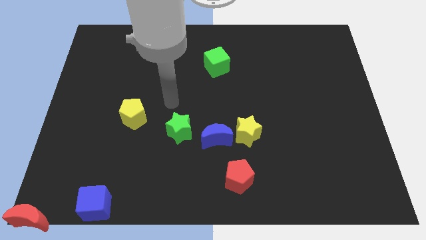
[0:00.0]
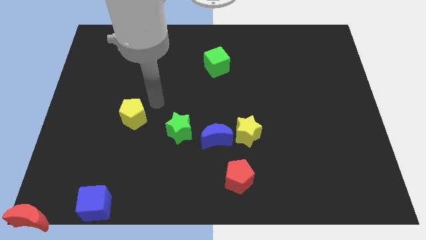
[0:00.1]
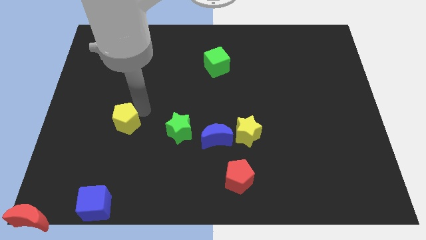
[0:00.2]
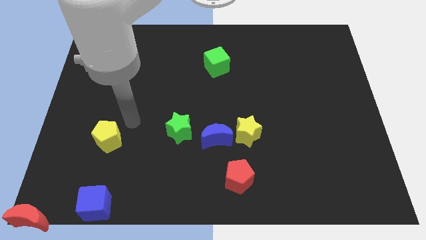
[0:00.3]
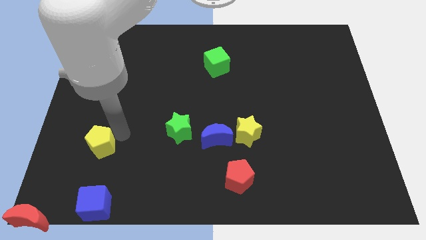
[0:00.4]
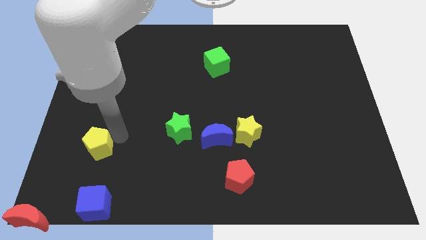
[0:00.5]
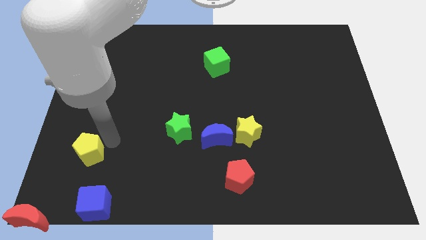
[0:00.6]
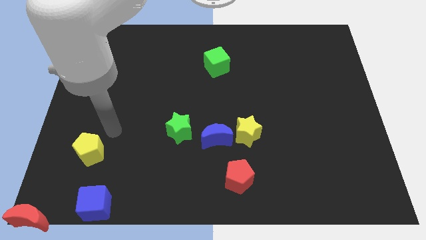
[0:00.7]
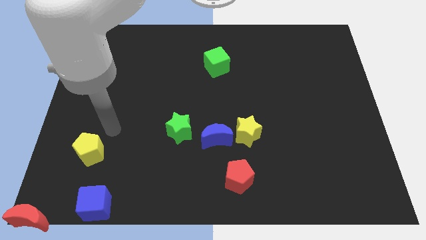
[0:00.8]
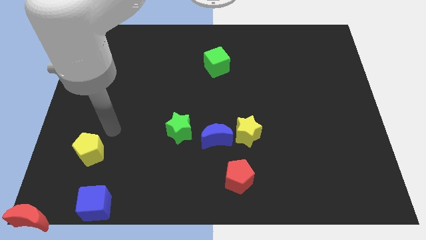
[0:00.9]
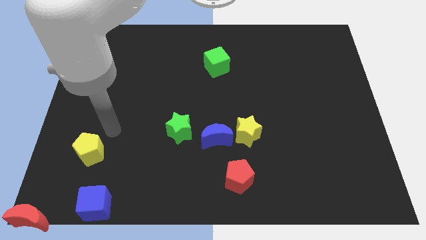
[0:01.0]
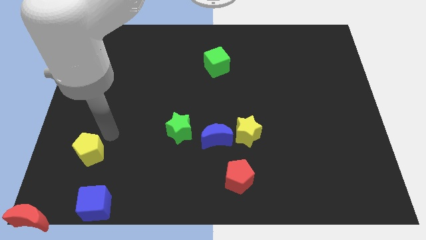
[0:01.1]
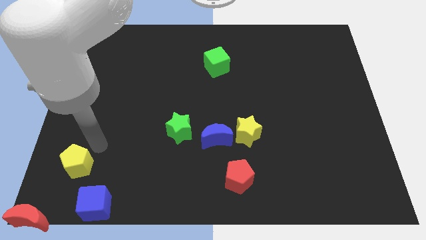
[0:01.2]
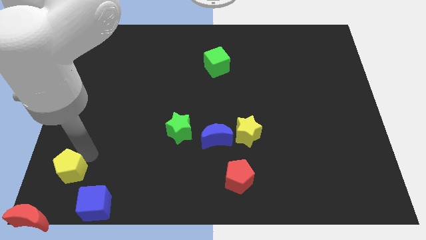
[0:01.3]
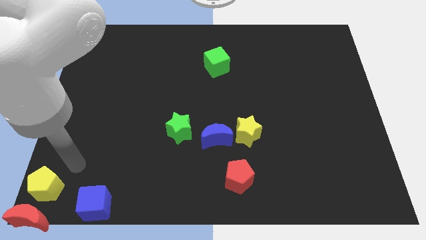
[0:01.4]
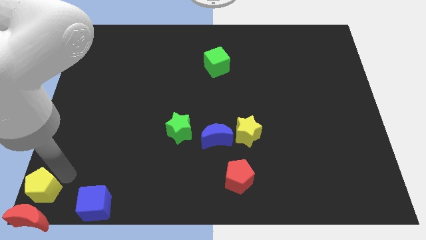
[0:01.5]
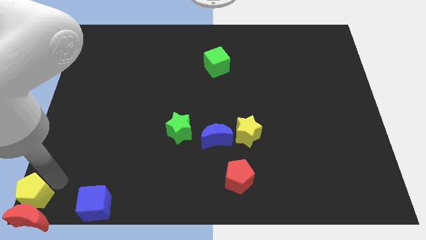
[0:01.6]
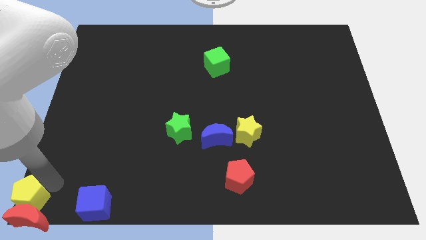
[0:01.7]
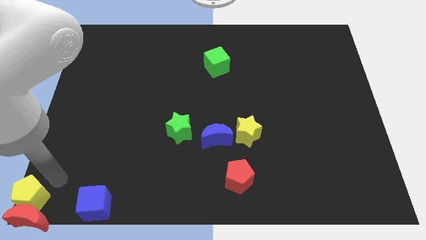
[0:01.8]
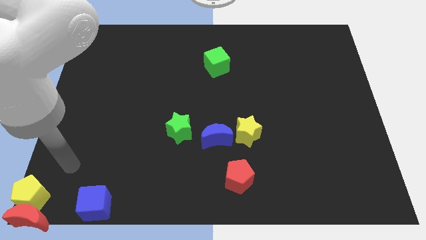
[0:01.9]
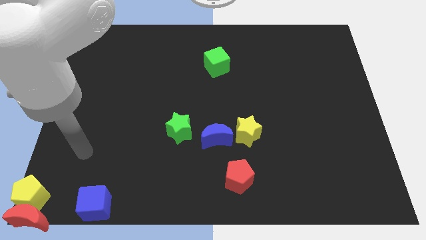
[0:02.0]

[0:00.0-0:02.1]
put the yellow pentagon to the top side of the red moon

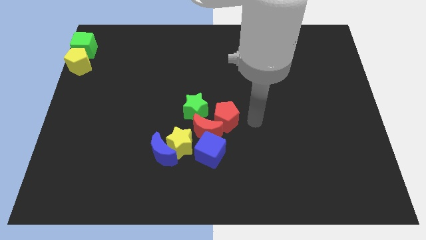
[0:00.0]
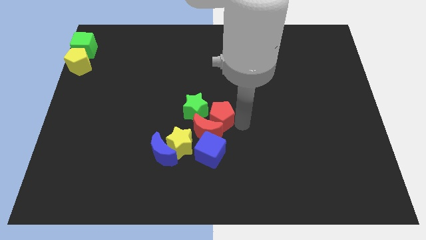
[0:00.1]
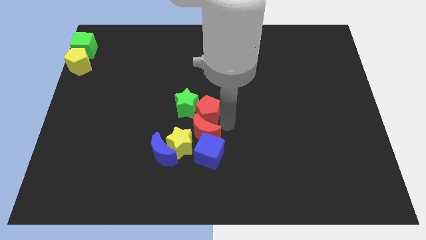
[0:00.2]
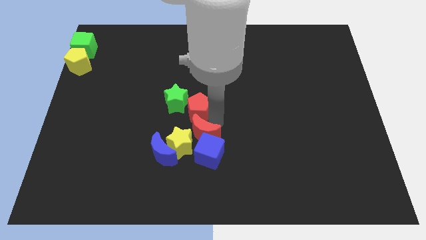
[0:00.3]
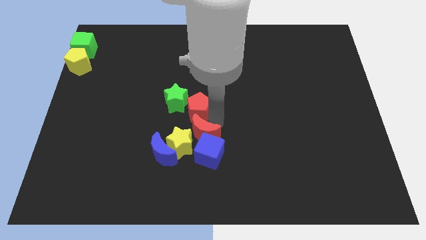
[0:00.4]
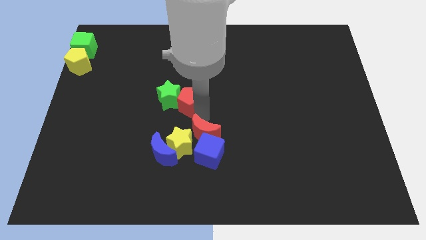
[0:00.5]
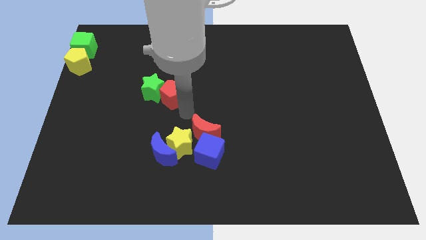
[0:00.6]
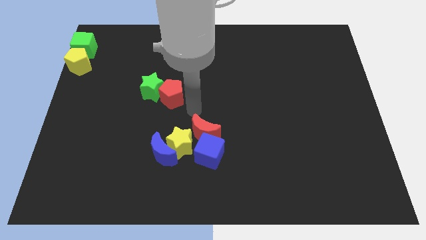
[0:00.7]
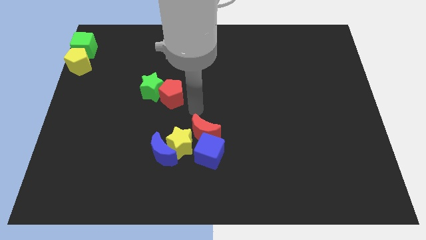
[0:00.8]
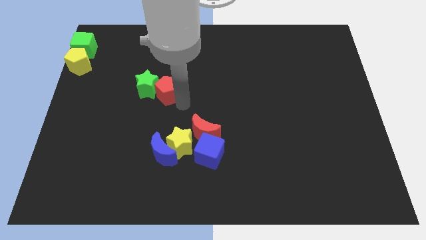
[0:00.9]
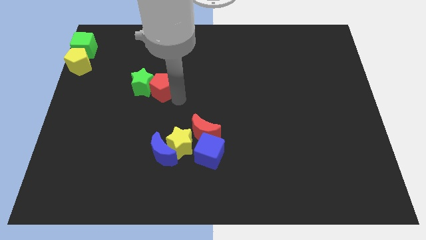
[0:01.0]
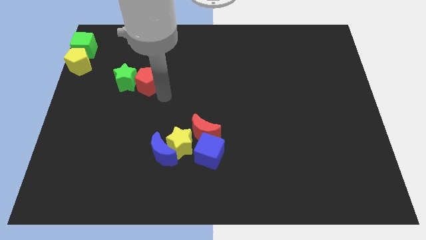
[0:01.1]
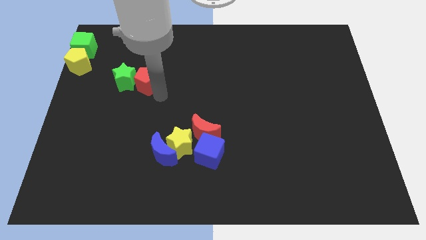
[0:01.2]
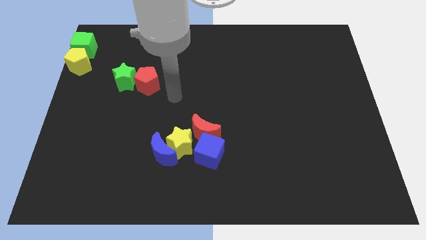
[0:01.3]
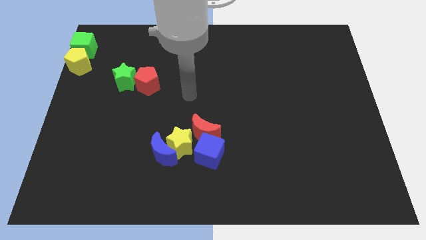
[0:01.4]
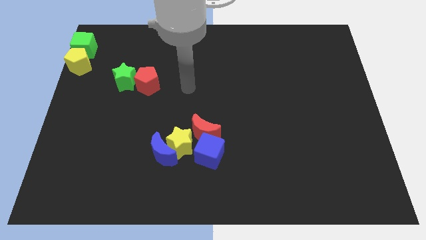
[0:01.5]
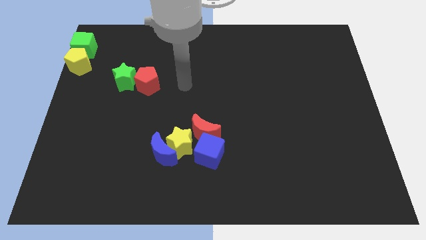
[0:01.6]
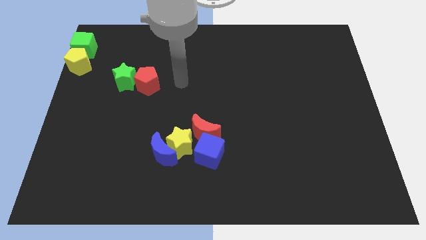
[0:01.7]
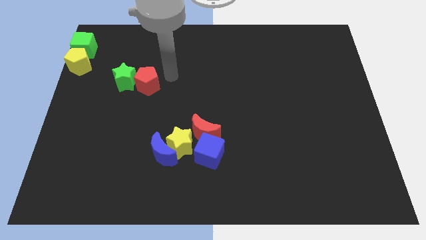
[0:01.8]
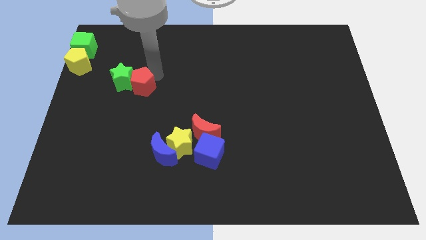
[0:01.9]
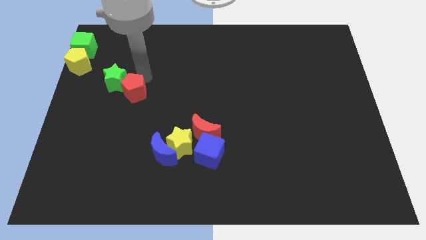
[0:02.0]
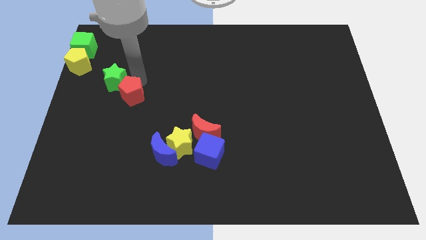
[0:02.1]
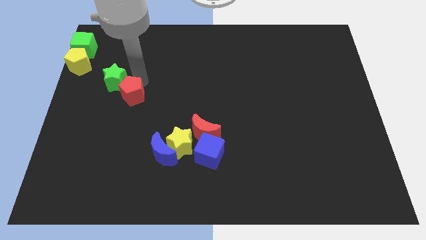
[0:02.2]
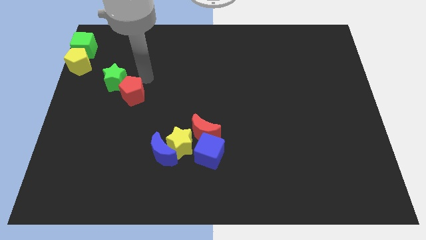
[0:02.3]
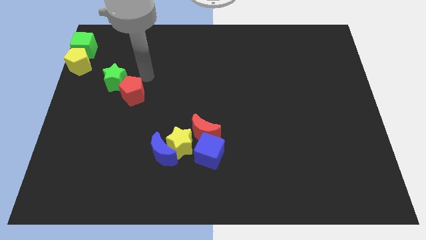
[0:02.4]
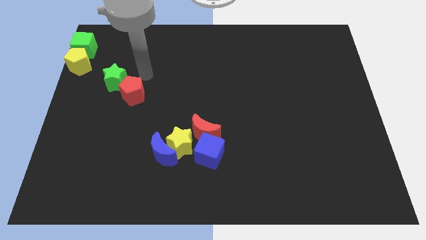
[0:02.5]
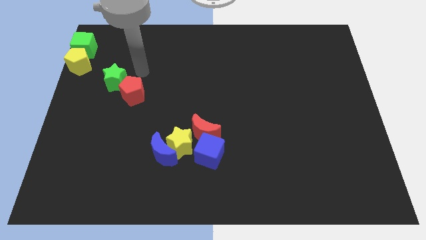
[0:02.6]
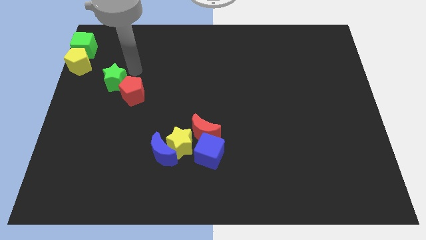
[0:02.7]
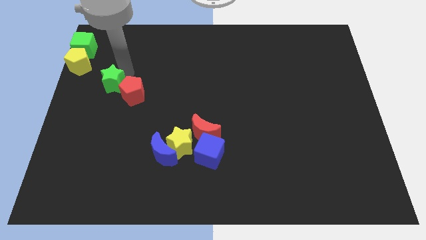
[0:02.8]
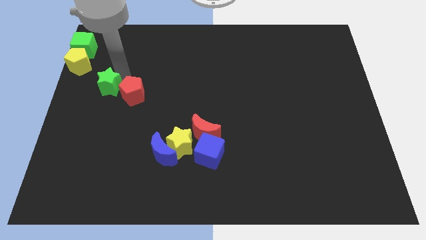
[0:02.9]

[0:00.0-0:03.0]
move the green star and the red pentagon towards the left

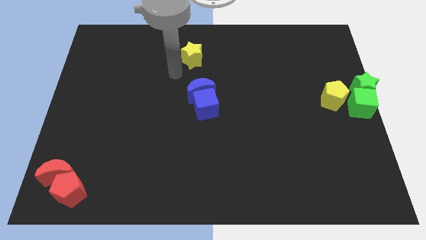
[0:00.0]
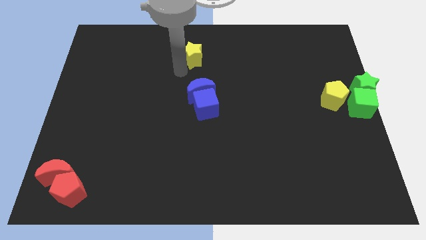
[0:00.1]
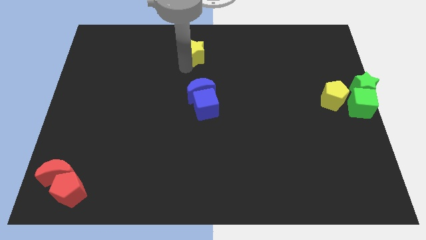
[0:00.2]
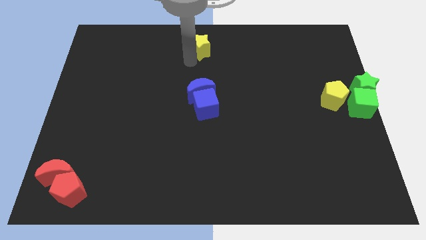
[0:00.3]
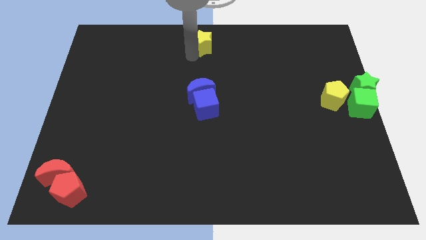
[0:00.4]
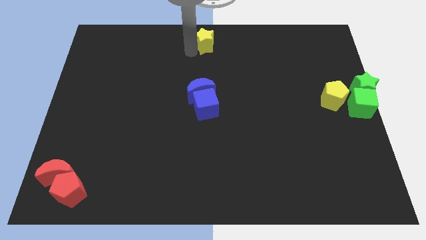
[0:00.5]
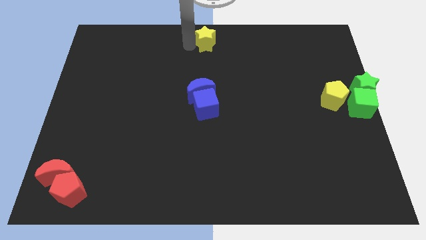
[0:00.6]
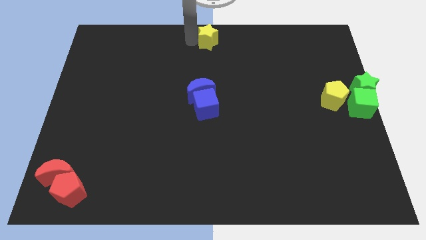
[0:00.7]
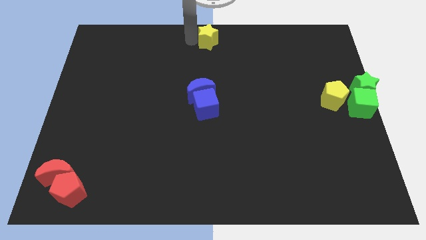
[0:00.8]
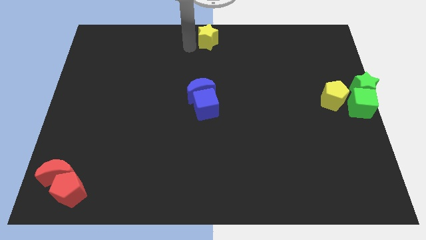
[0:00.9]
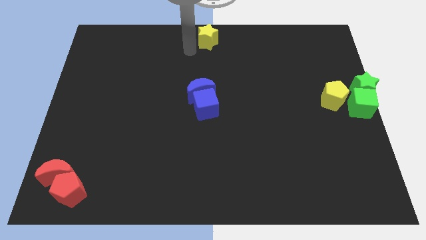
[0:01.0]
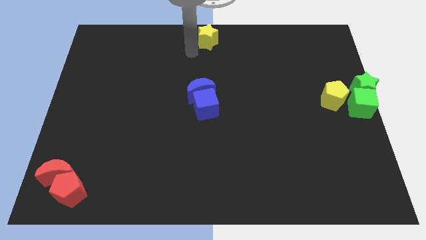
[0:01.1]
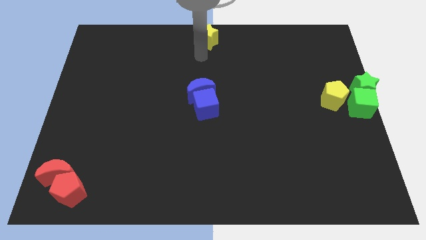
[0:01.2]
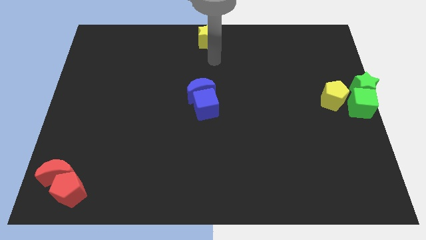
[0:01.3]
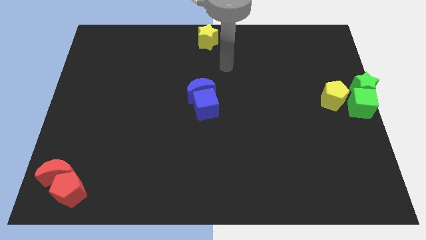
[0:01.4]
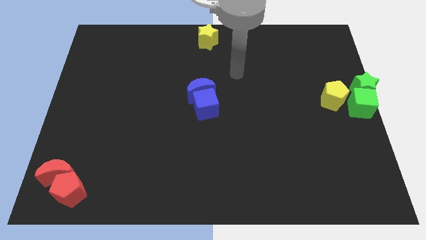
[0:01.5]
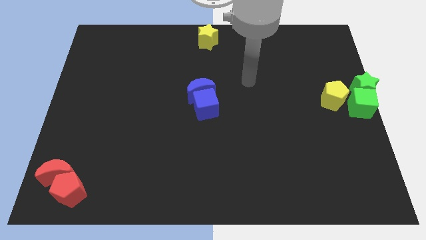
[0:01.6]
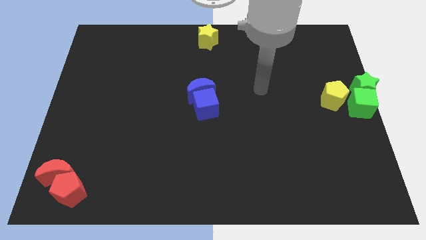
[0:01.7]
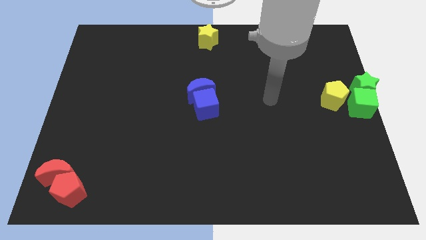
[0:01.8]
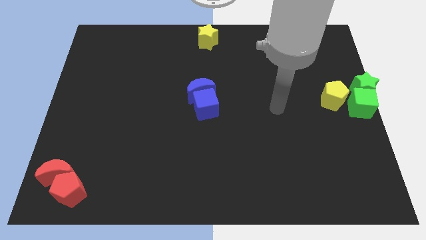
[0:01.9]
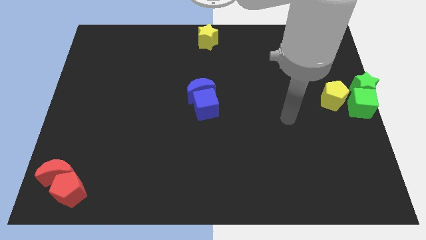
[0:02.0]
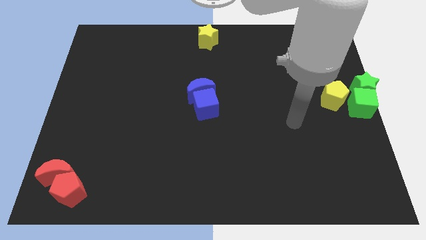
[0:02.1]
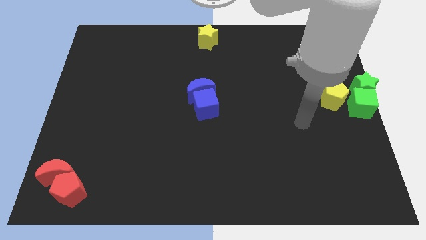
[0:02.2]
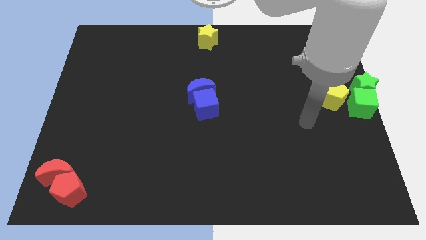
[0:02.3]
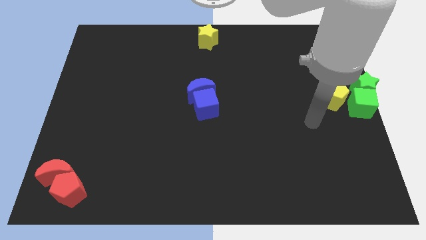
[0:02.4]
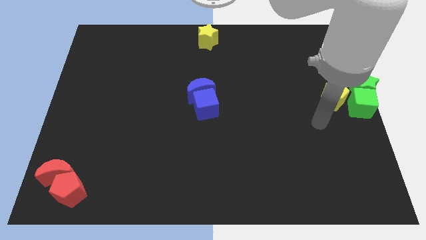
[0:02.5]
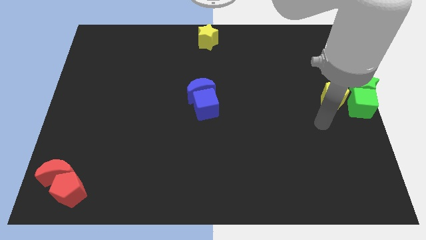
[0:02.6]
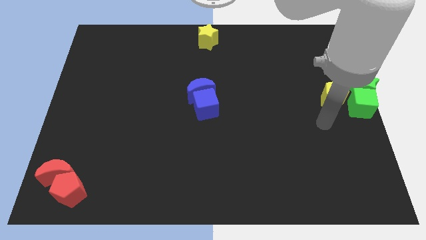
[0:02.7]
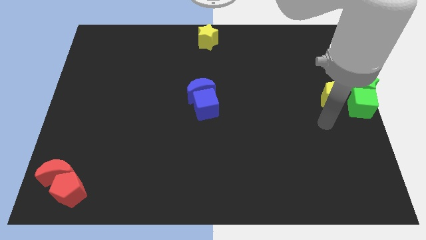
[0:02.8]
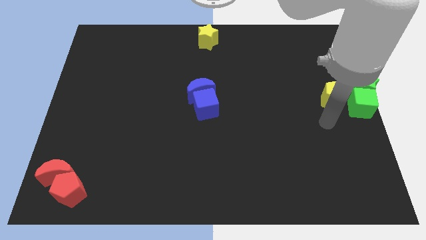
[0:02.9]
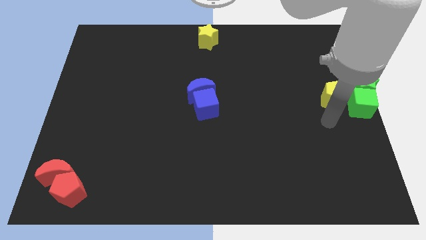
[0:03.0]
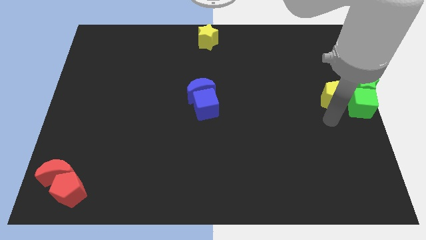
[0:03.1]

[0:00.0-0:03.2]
put the yellow star at the top center of the board

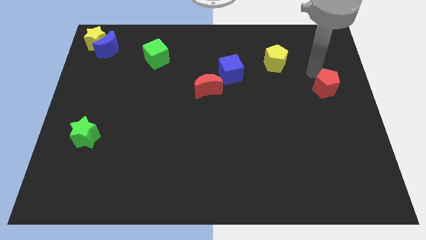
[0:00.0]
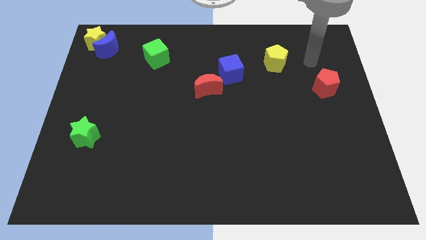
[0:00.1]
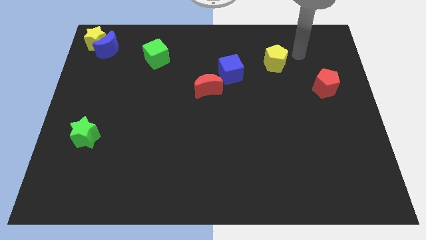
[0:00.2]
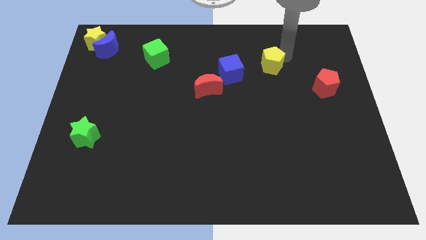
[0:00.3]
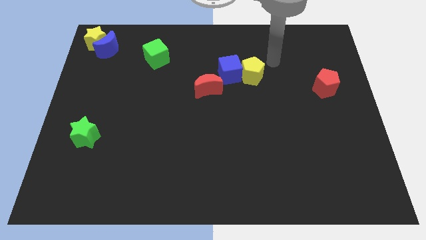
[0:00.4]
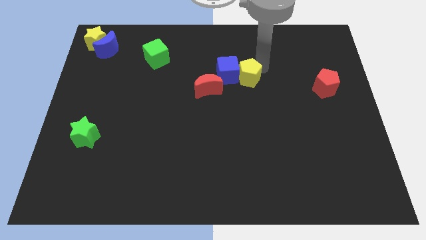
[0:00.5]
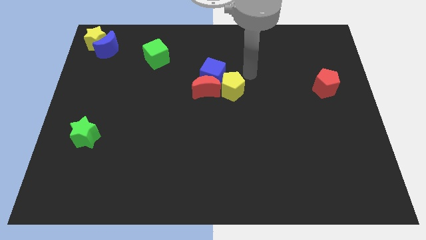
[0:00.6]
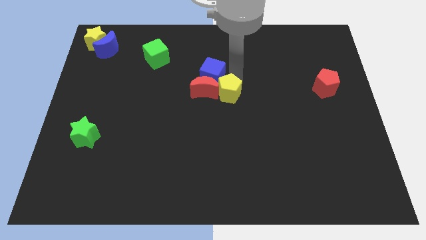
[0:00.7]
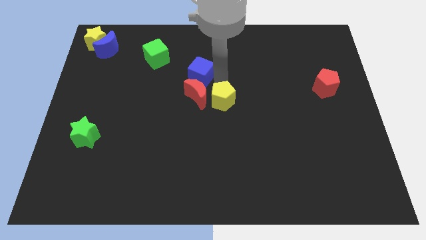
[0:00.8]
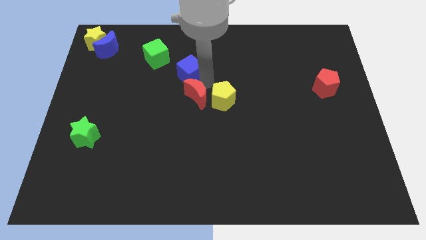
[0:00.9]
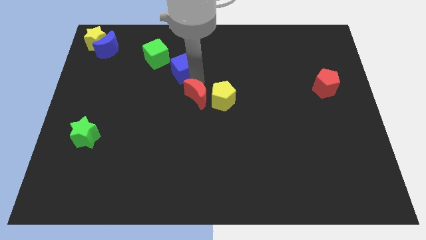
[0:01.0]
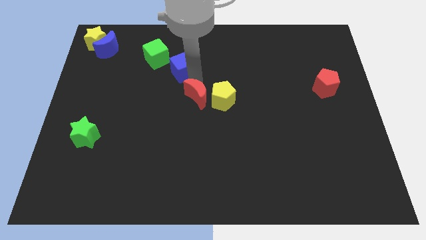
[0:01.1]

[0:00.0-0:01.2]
slide the yellow pentagon towards the center
